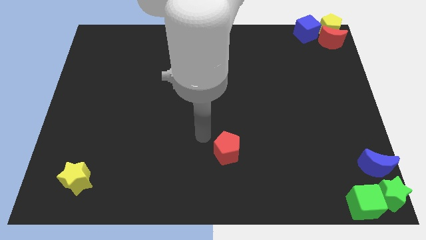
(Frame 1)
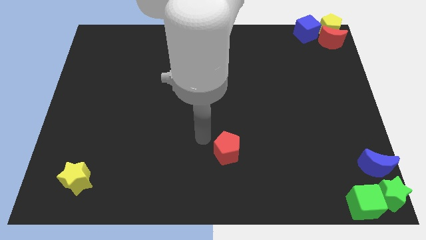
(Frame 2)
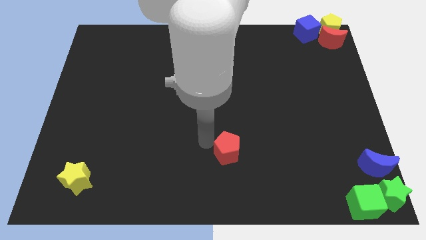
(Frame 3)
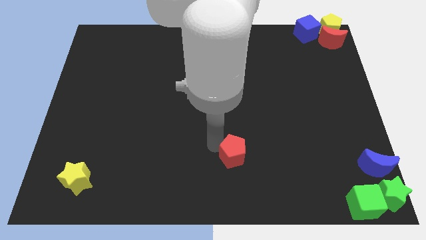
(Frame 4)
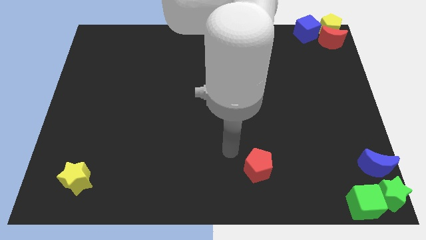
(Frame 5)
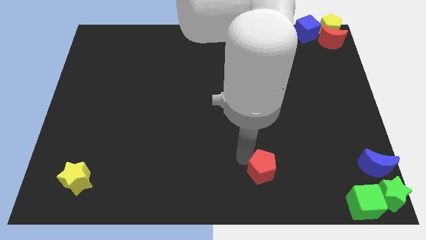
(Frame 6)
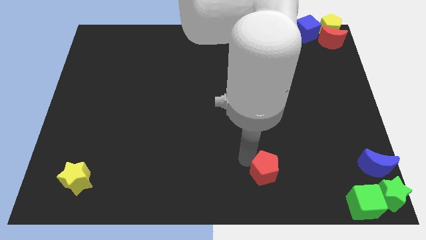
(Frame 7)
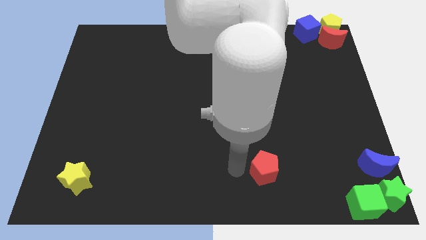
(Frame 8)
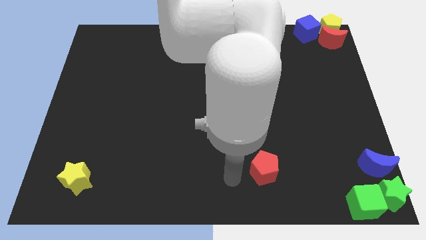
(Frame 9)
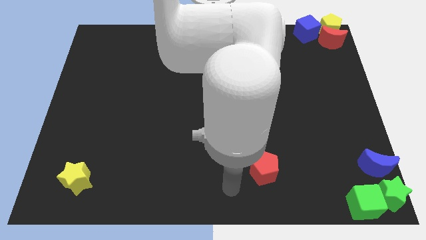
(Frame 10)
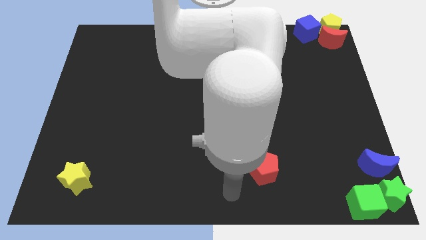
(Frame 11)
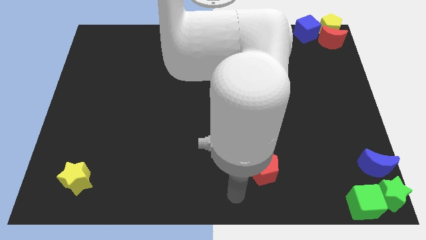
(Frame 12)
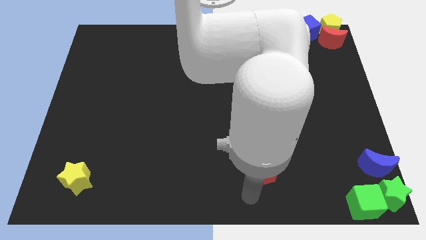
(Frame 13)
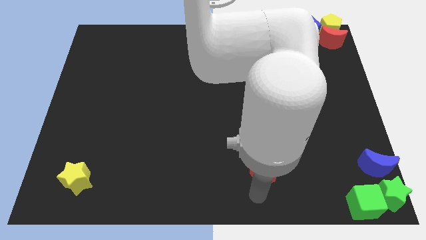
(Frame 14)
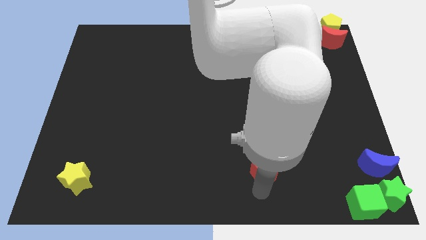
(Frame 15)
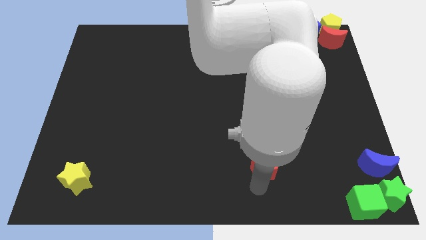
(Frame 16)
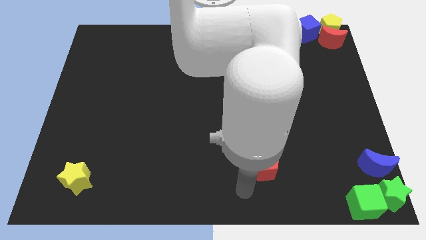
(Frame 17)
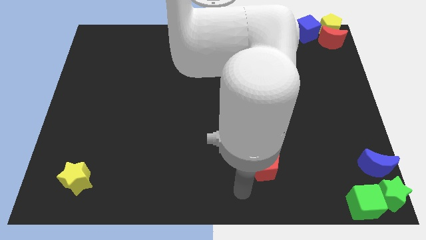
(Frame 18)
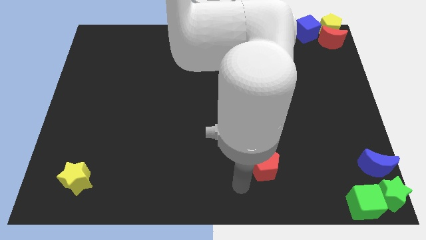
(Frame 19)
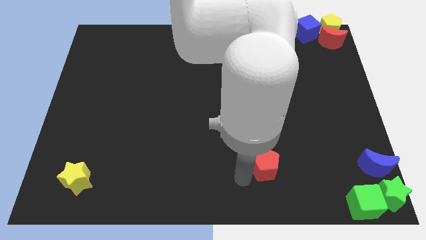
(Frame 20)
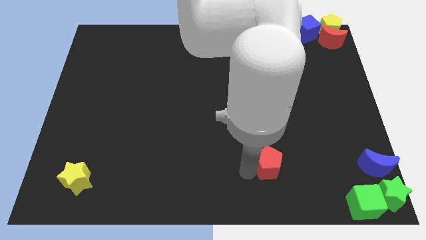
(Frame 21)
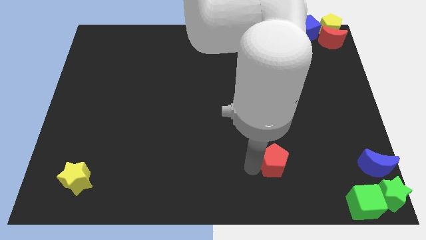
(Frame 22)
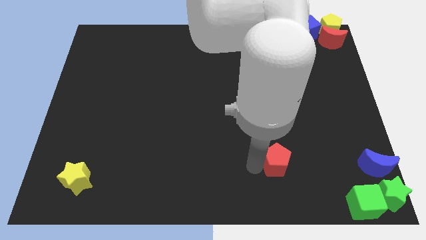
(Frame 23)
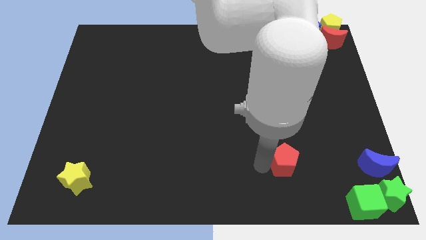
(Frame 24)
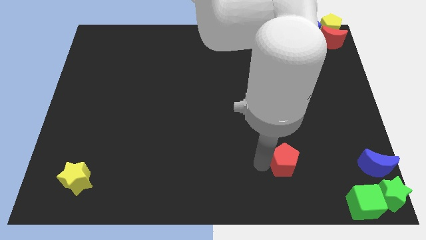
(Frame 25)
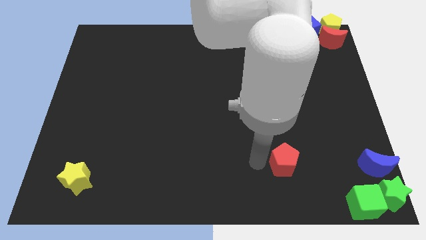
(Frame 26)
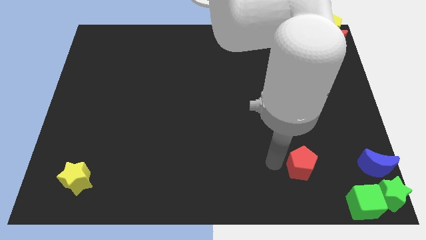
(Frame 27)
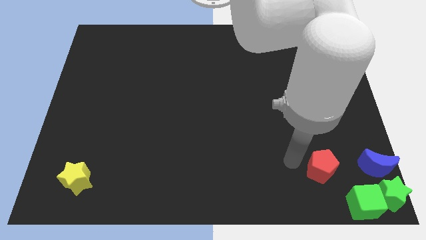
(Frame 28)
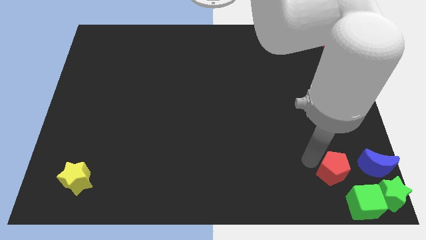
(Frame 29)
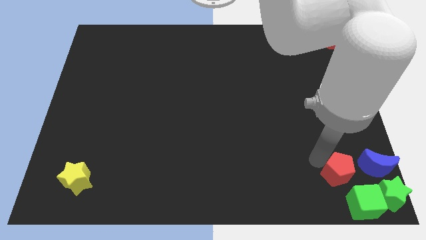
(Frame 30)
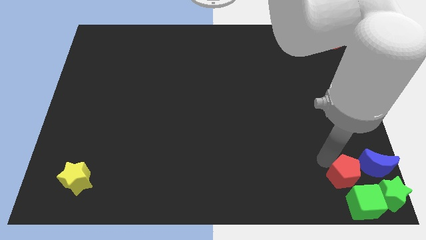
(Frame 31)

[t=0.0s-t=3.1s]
slide the red pentagon close to the left side of the blue crescent

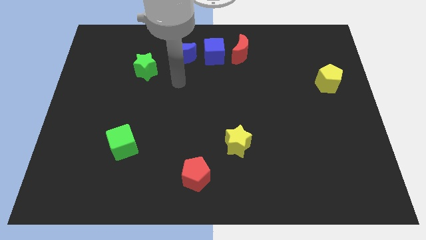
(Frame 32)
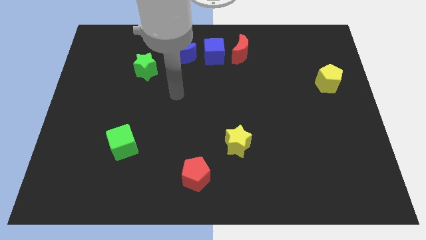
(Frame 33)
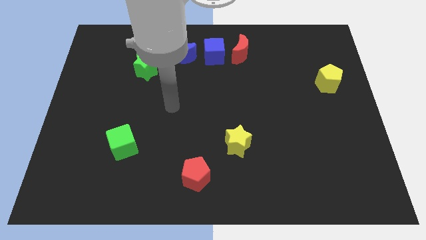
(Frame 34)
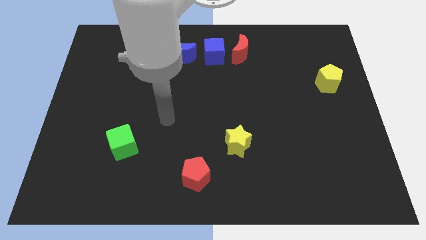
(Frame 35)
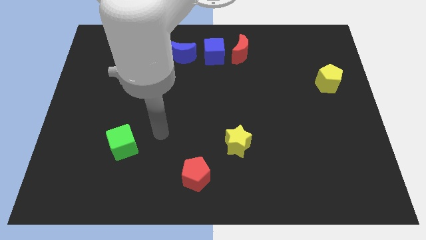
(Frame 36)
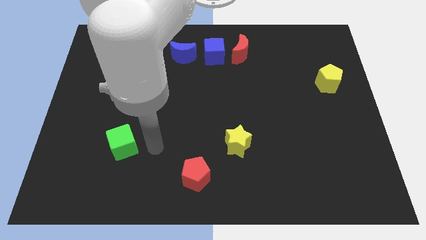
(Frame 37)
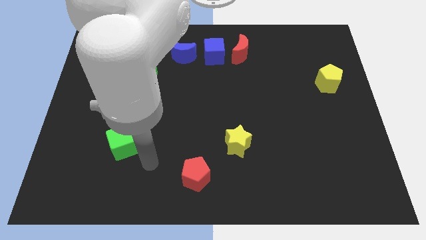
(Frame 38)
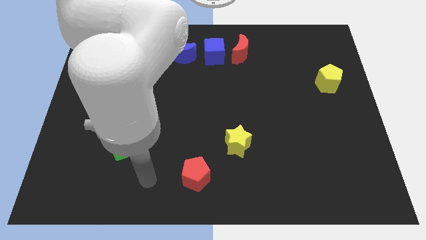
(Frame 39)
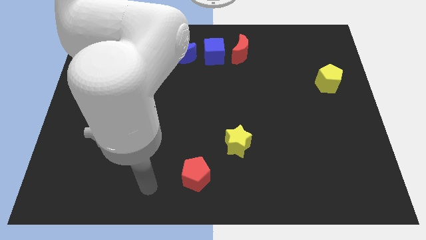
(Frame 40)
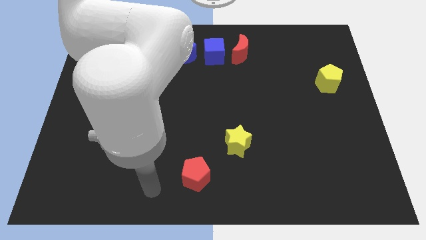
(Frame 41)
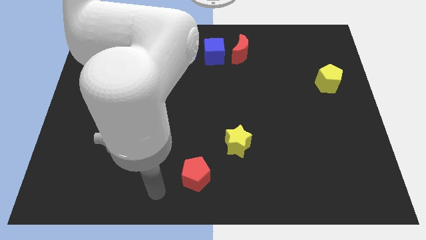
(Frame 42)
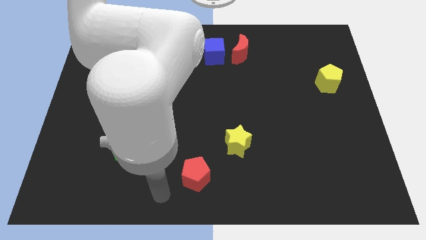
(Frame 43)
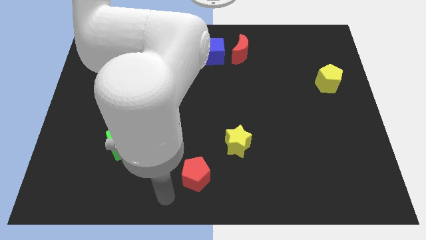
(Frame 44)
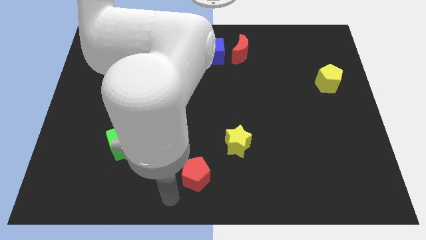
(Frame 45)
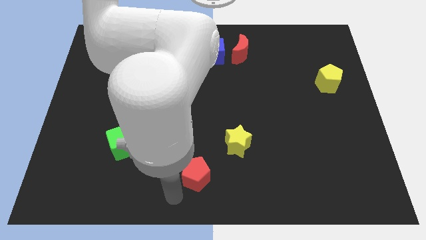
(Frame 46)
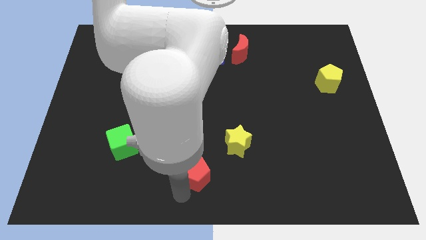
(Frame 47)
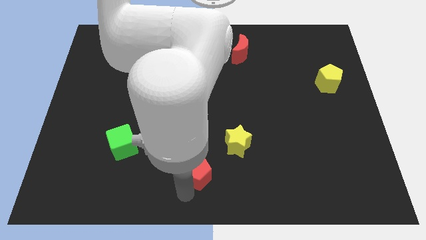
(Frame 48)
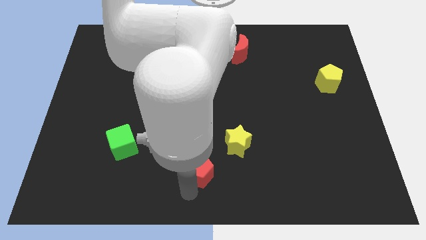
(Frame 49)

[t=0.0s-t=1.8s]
push the red pentagon slightly up

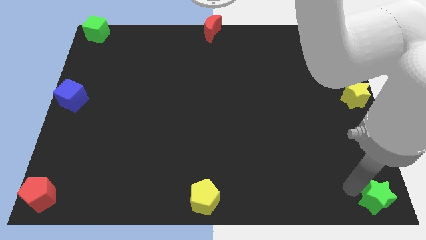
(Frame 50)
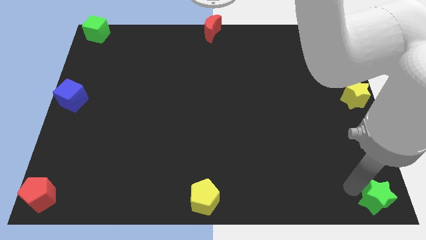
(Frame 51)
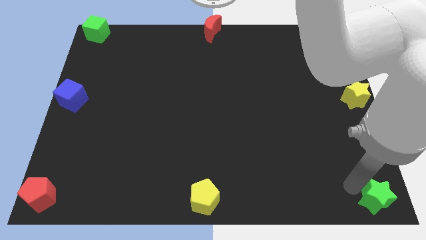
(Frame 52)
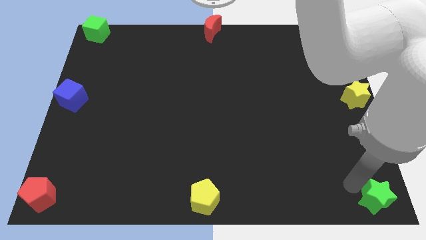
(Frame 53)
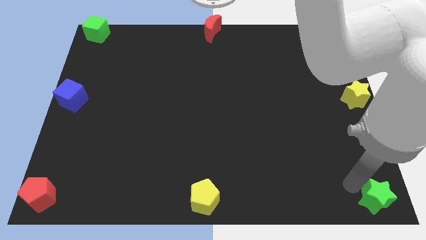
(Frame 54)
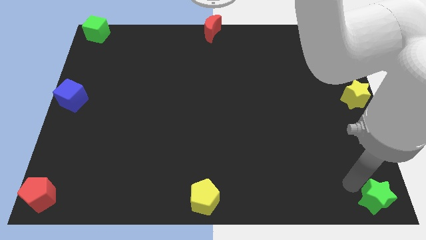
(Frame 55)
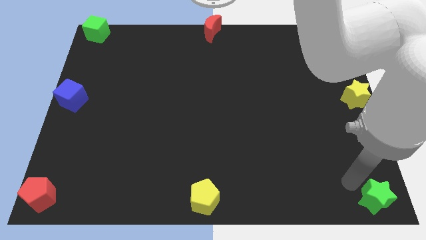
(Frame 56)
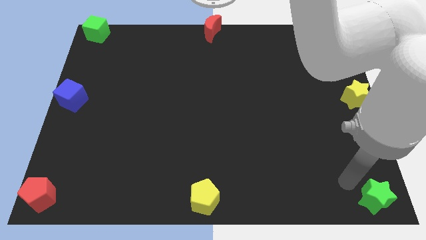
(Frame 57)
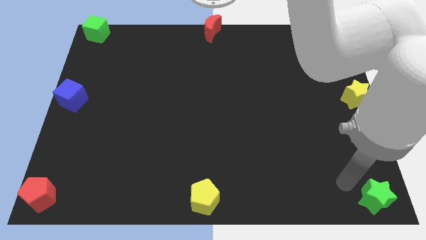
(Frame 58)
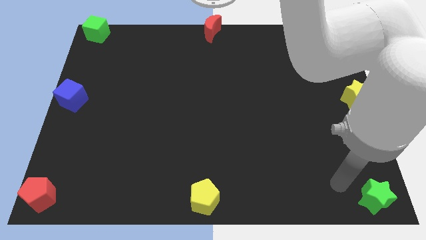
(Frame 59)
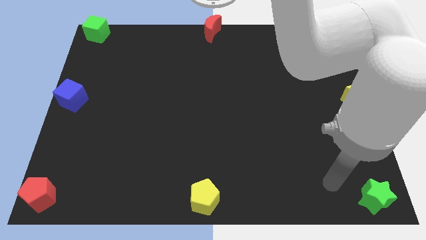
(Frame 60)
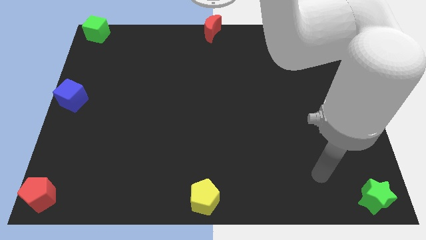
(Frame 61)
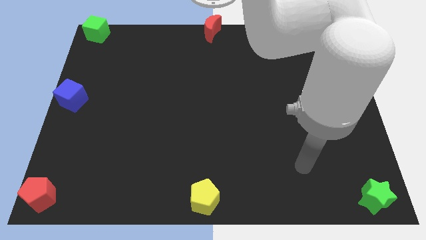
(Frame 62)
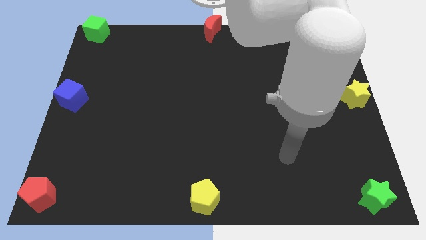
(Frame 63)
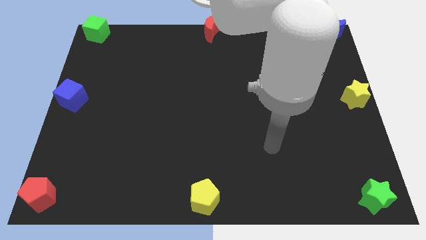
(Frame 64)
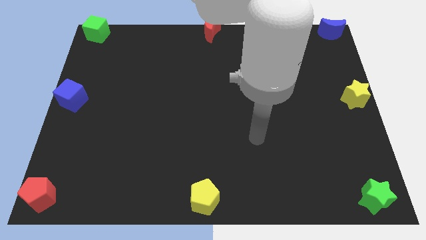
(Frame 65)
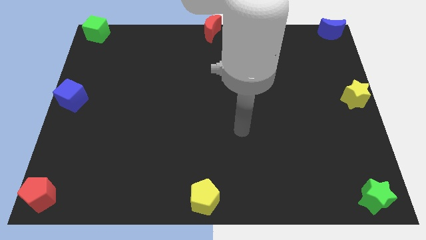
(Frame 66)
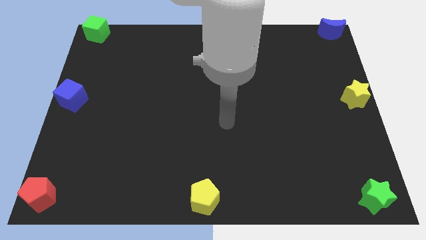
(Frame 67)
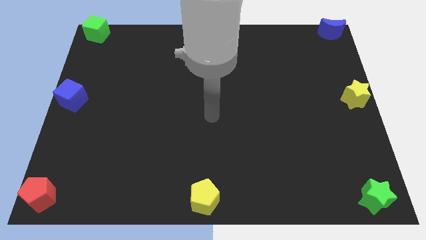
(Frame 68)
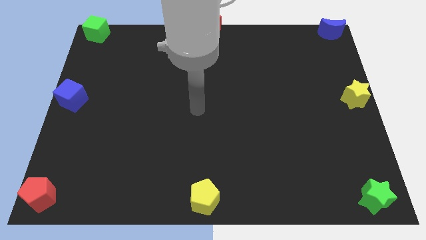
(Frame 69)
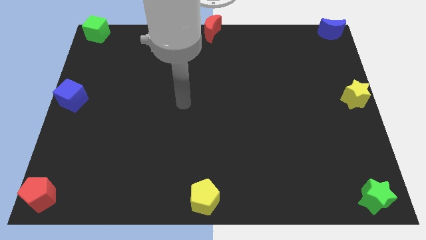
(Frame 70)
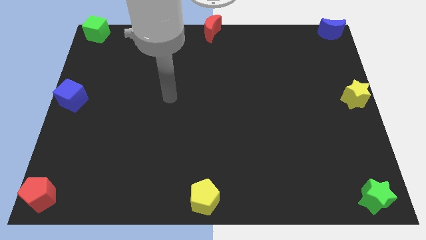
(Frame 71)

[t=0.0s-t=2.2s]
place the green star at the bottom right of the board

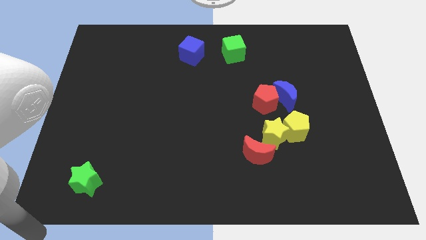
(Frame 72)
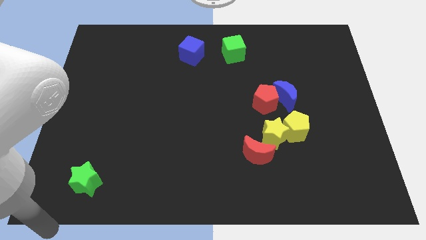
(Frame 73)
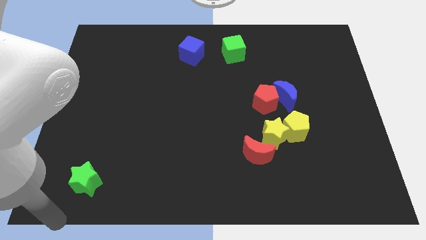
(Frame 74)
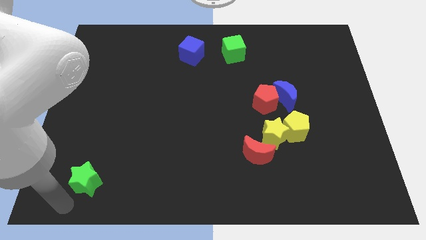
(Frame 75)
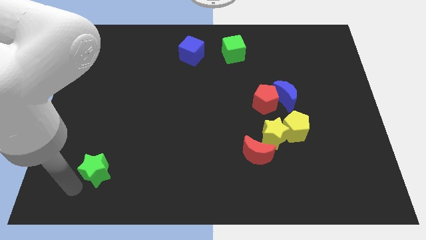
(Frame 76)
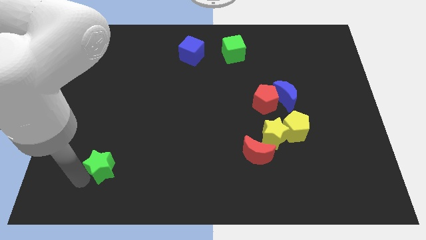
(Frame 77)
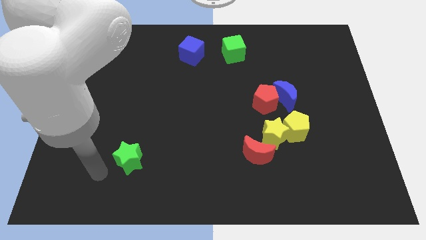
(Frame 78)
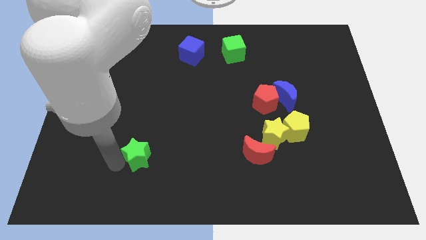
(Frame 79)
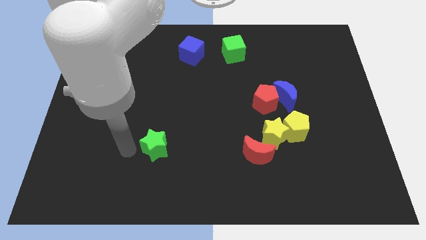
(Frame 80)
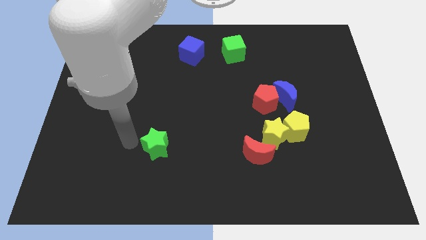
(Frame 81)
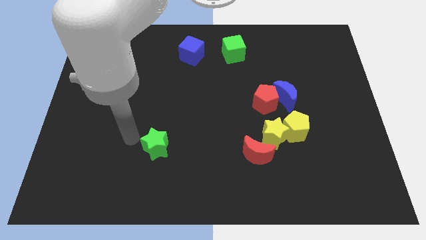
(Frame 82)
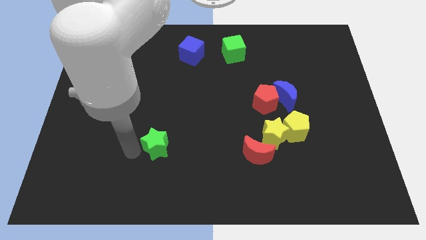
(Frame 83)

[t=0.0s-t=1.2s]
push the green star to the left of the red crescent

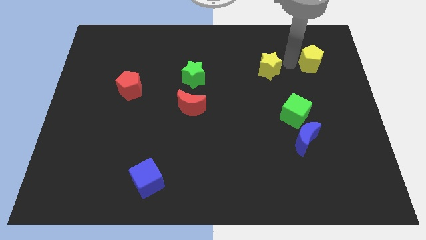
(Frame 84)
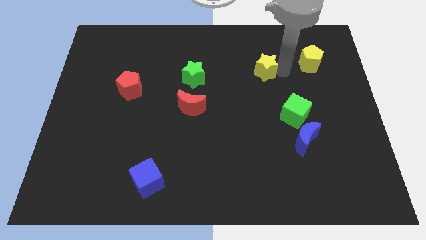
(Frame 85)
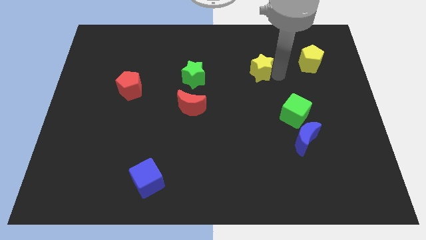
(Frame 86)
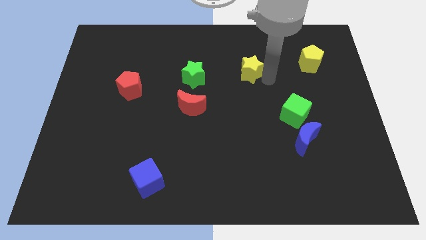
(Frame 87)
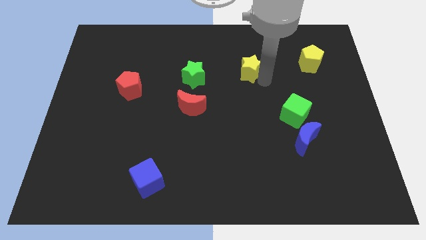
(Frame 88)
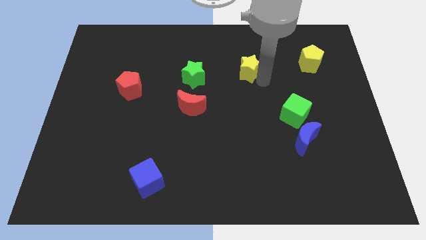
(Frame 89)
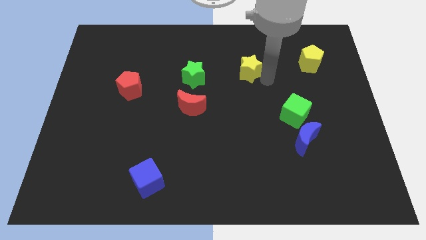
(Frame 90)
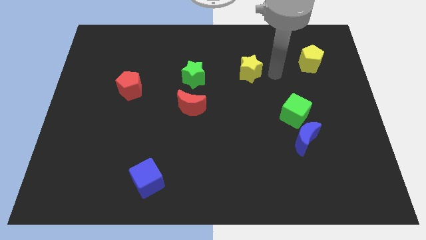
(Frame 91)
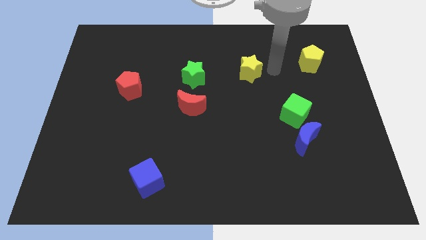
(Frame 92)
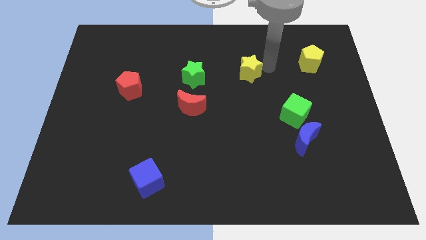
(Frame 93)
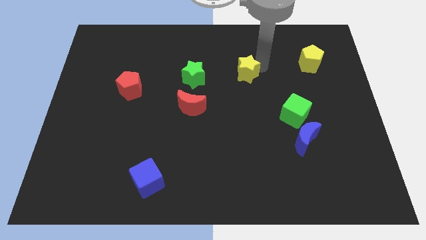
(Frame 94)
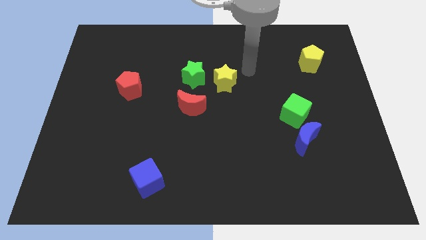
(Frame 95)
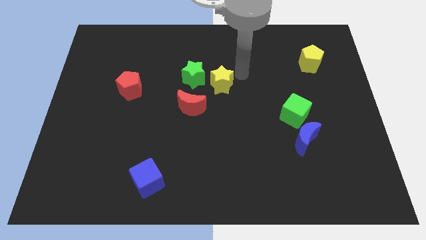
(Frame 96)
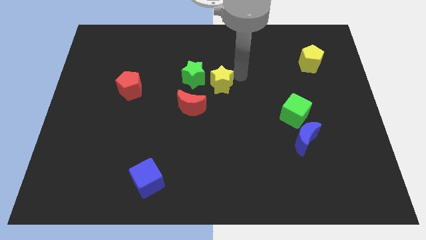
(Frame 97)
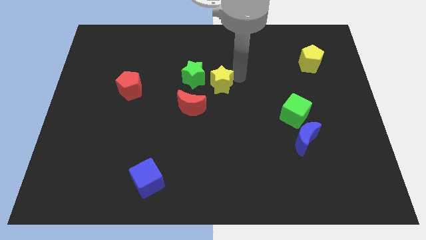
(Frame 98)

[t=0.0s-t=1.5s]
push the yellow star into the green star
